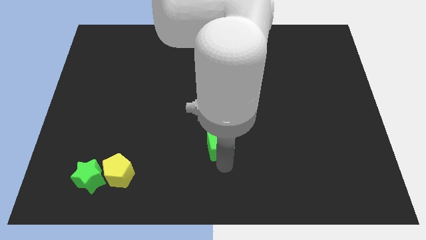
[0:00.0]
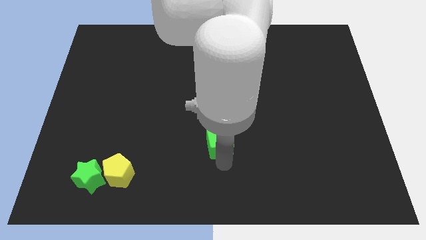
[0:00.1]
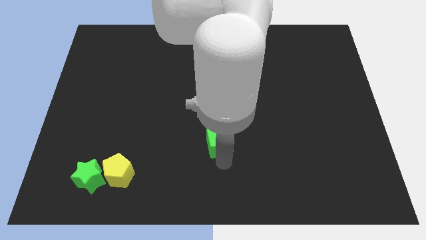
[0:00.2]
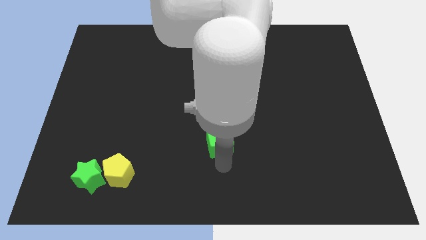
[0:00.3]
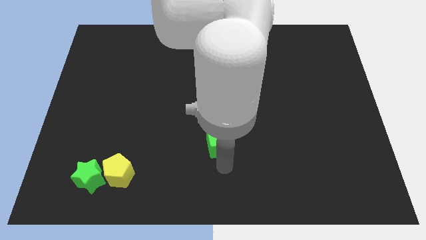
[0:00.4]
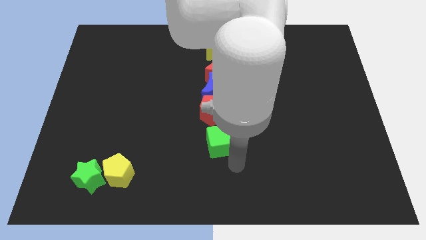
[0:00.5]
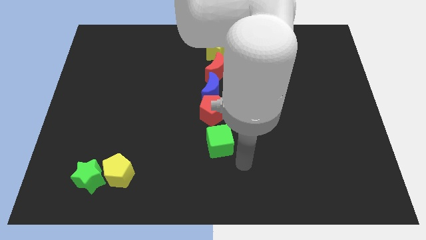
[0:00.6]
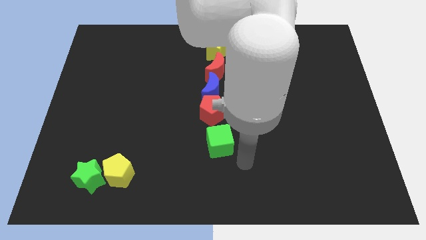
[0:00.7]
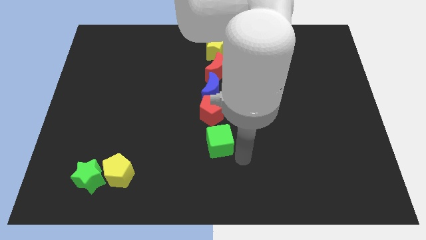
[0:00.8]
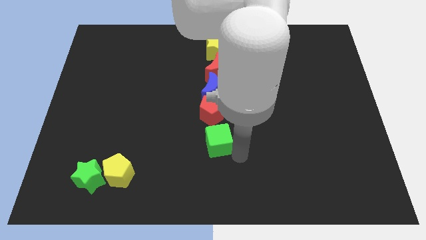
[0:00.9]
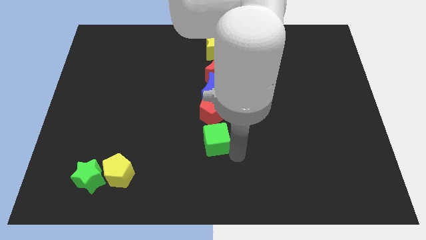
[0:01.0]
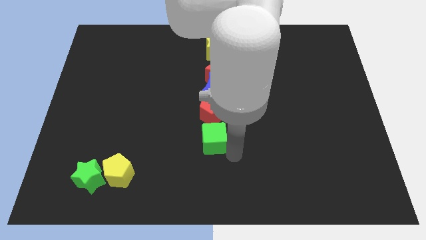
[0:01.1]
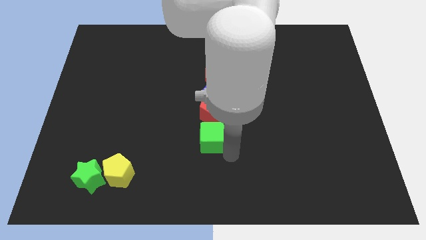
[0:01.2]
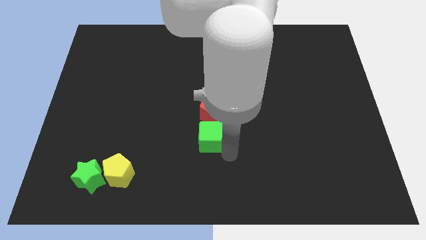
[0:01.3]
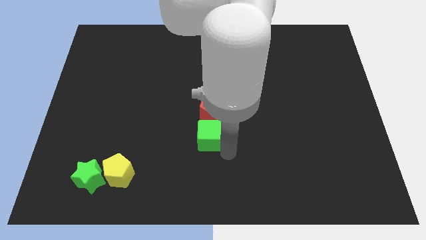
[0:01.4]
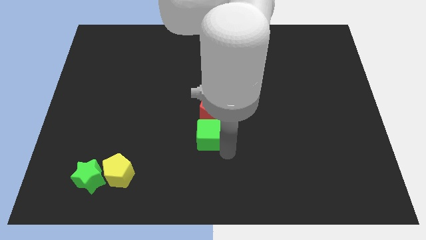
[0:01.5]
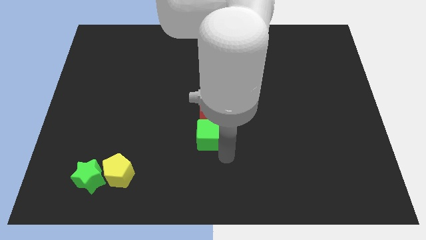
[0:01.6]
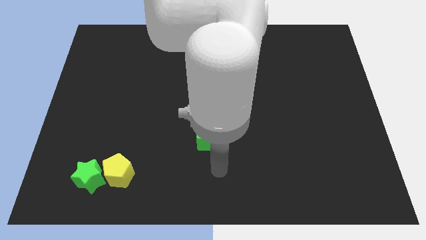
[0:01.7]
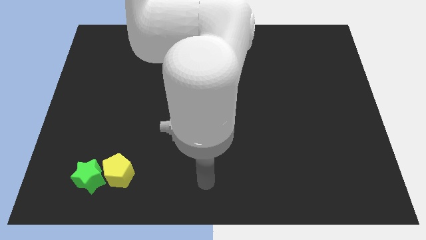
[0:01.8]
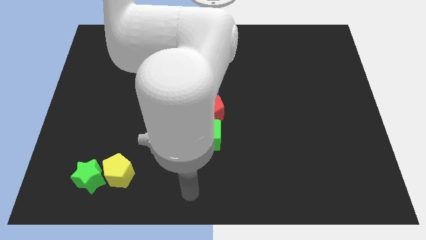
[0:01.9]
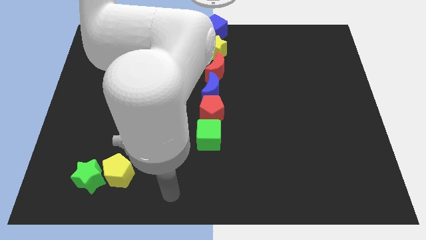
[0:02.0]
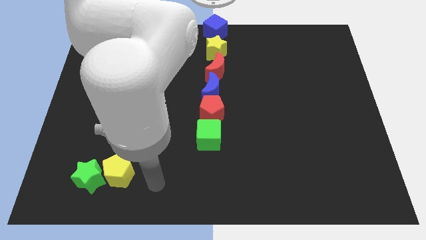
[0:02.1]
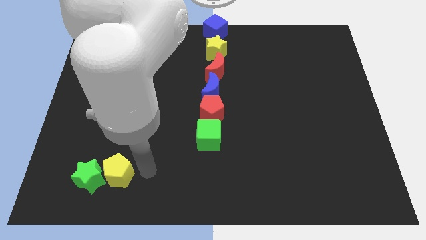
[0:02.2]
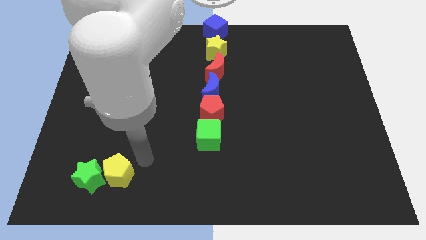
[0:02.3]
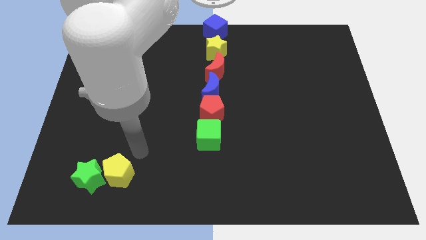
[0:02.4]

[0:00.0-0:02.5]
place the green cube at the bottom of the red pentagon

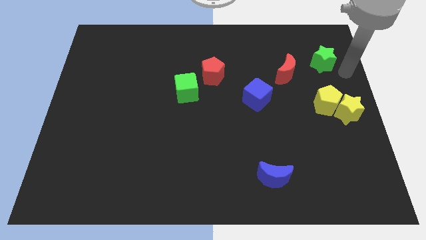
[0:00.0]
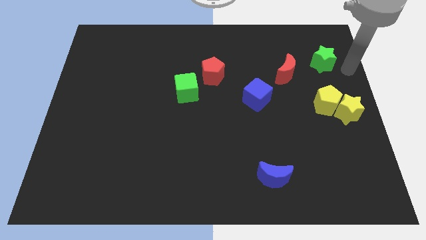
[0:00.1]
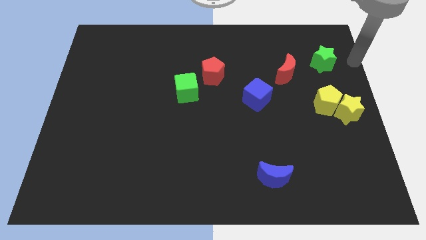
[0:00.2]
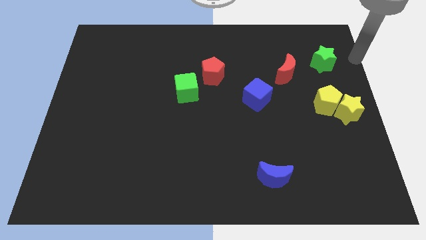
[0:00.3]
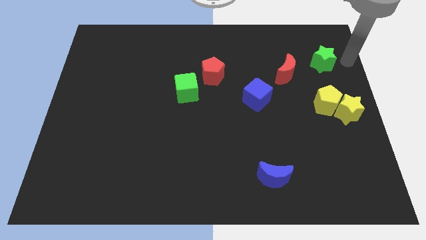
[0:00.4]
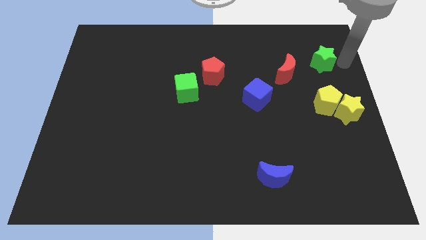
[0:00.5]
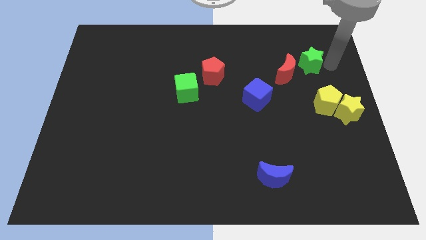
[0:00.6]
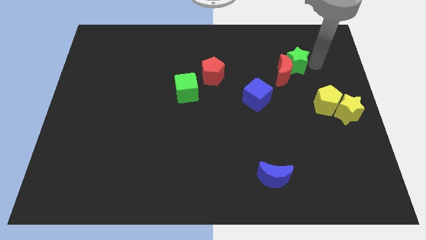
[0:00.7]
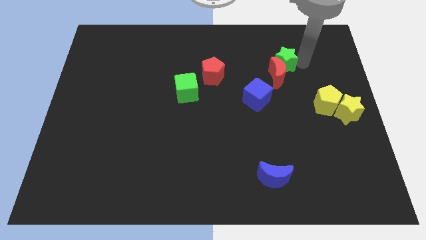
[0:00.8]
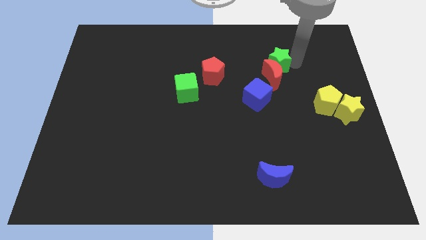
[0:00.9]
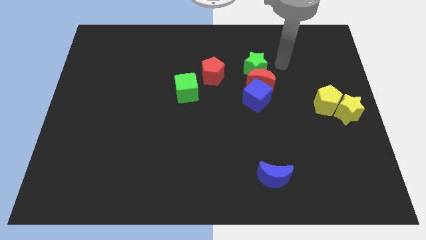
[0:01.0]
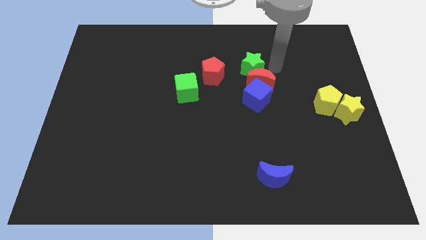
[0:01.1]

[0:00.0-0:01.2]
arrange green star red crescent and blue cube in a vertical line

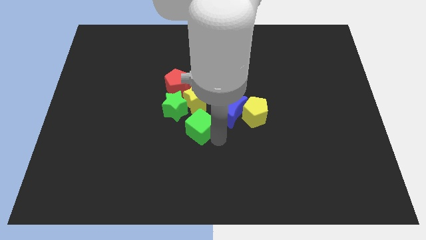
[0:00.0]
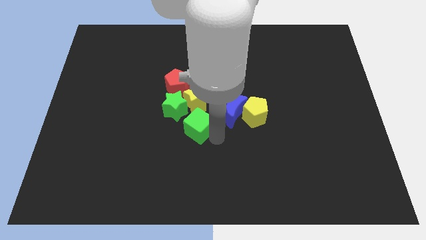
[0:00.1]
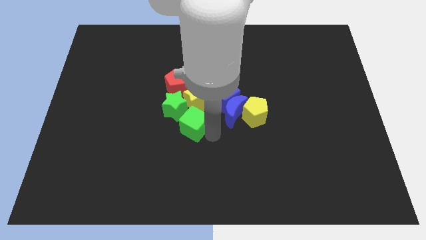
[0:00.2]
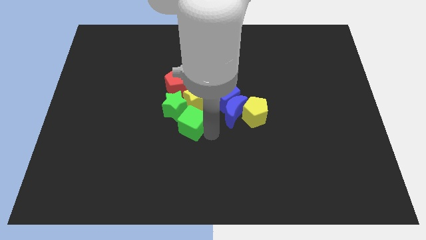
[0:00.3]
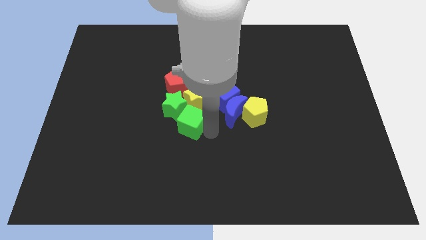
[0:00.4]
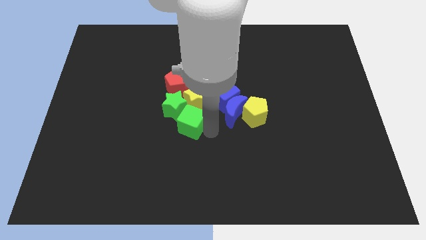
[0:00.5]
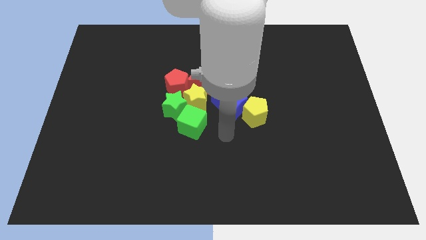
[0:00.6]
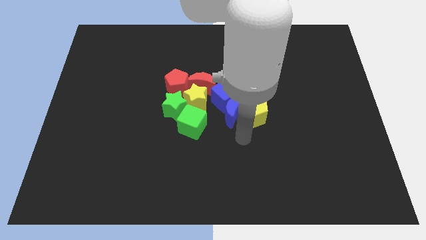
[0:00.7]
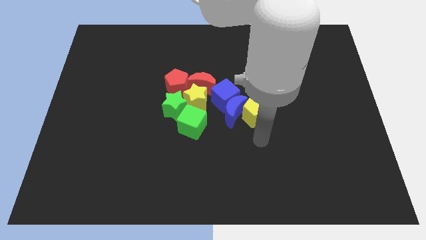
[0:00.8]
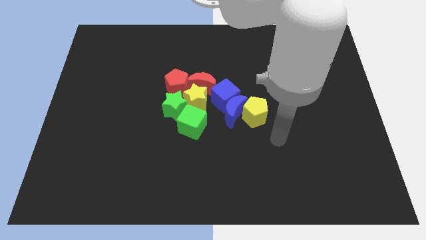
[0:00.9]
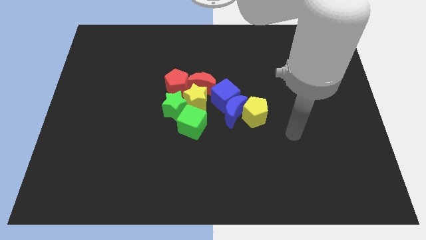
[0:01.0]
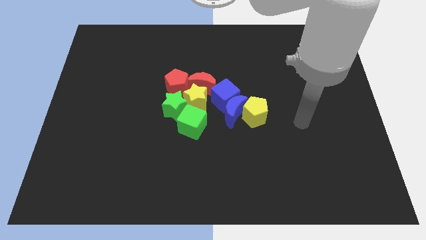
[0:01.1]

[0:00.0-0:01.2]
move the green cube into the green star

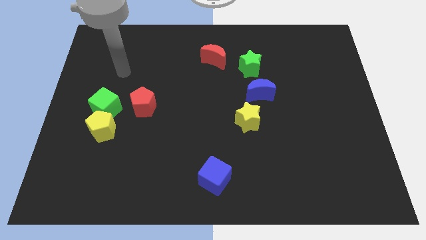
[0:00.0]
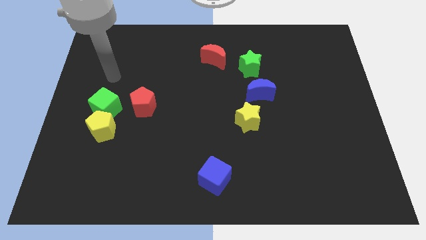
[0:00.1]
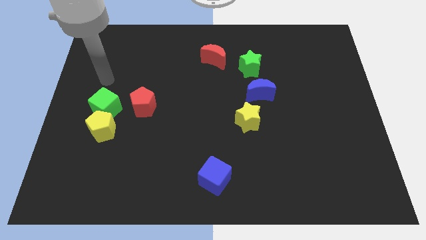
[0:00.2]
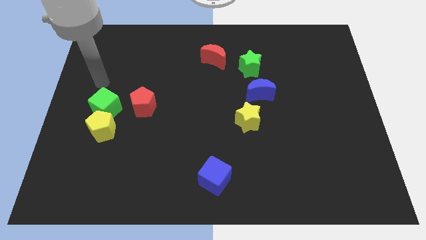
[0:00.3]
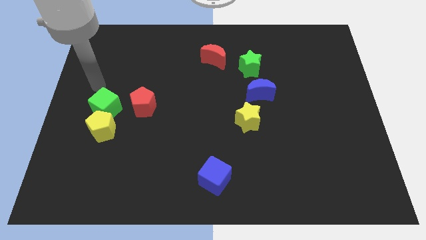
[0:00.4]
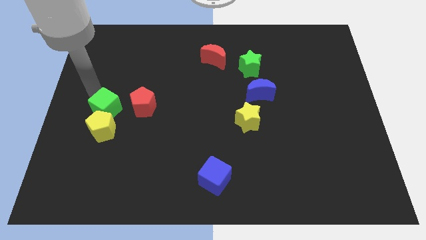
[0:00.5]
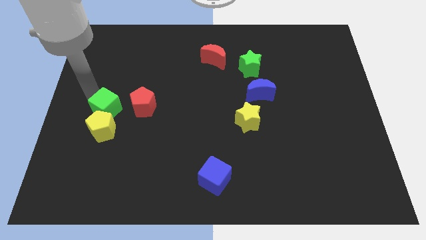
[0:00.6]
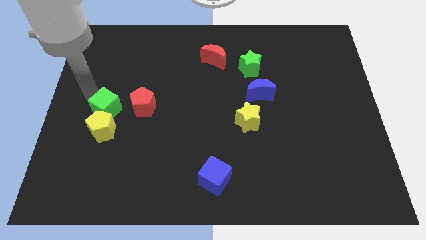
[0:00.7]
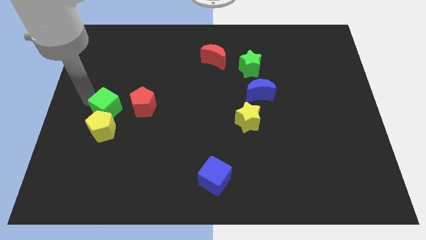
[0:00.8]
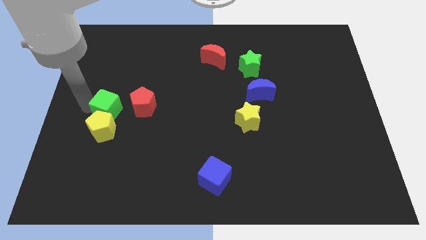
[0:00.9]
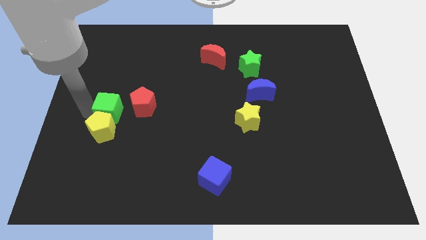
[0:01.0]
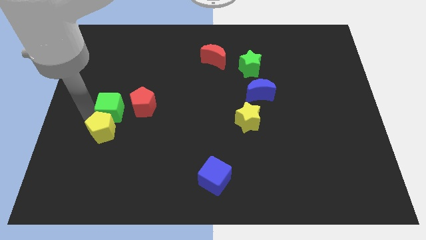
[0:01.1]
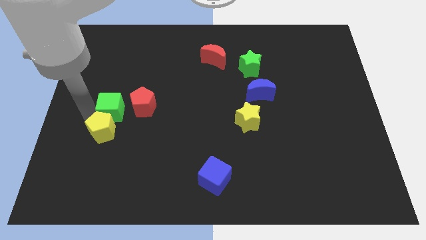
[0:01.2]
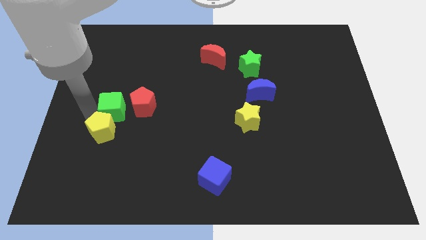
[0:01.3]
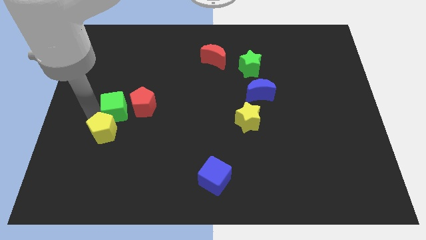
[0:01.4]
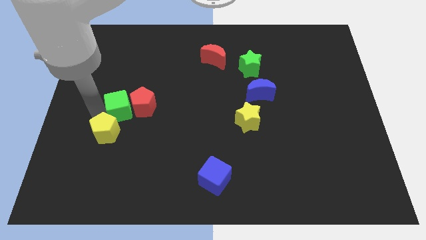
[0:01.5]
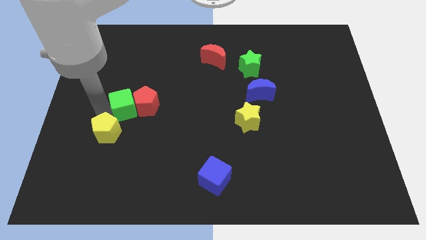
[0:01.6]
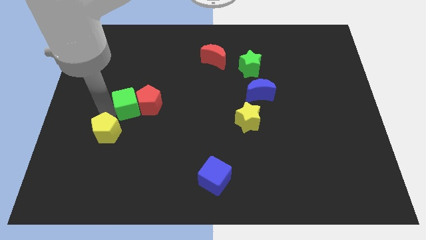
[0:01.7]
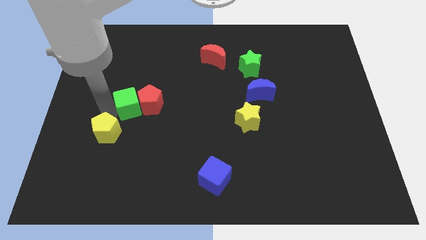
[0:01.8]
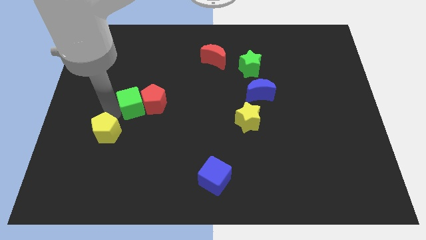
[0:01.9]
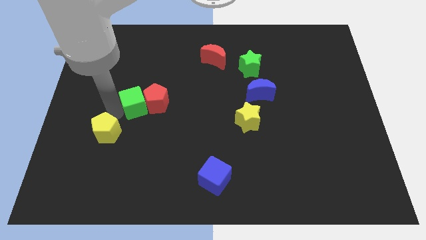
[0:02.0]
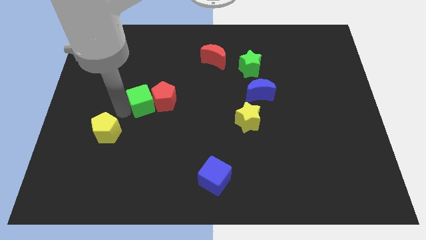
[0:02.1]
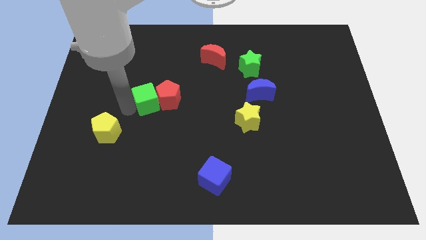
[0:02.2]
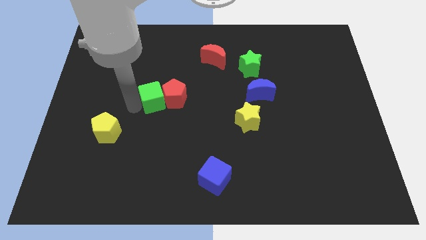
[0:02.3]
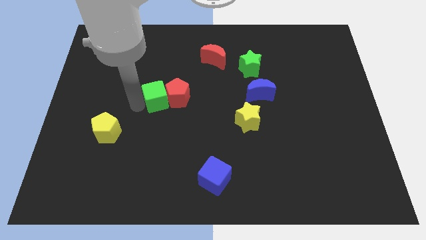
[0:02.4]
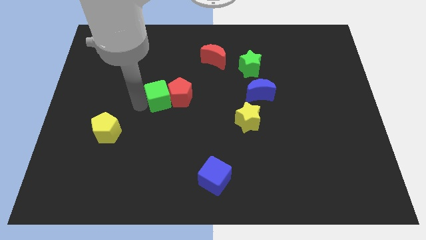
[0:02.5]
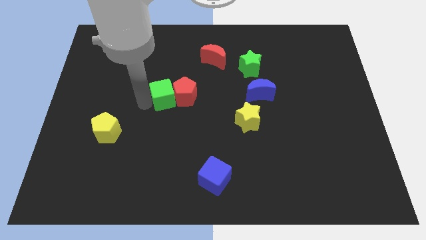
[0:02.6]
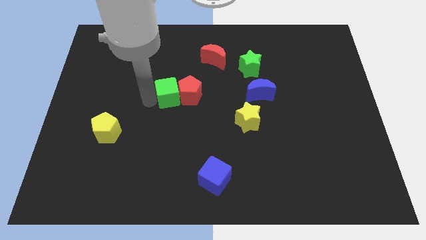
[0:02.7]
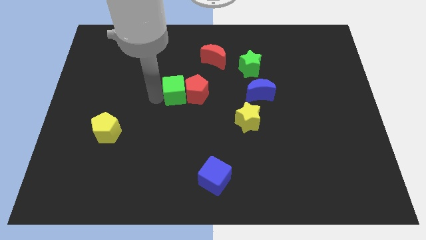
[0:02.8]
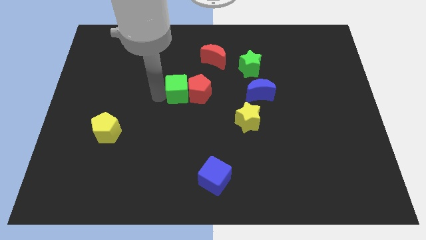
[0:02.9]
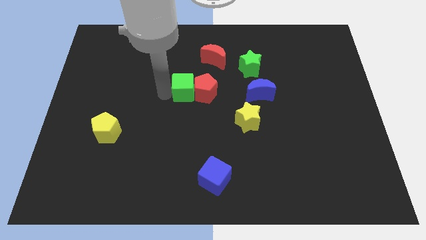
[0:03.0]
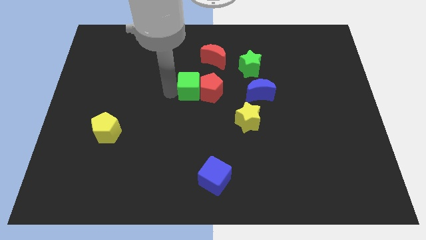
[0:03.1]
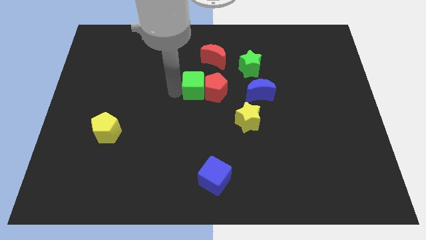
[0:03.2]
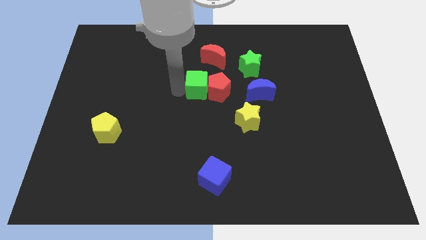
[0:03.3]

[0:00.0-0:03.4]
slide the green star into the red moon

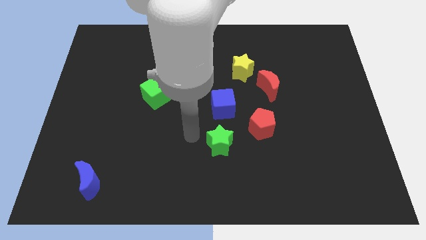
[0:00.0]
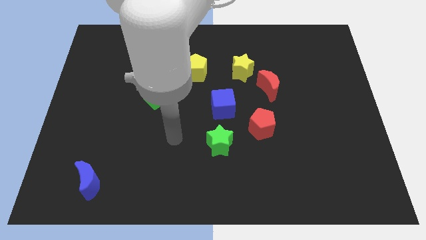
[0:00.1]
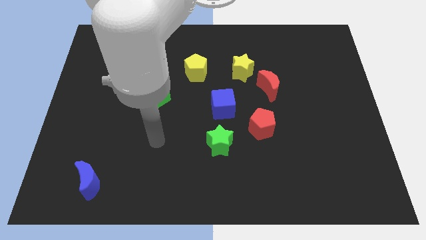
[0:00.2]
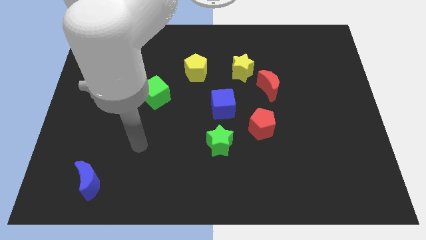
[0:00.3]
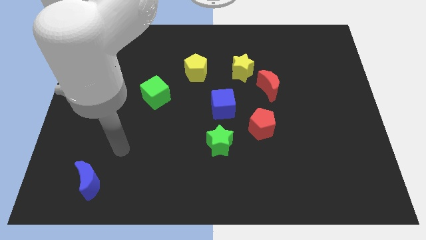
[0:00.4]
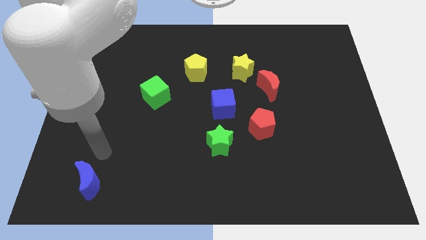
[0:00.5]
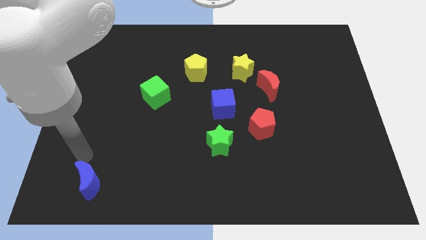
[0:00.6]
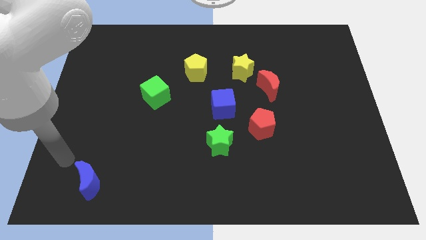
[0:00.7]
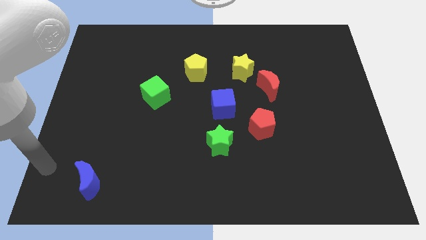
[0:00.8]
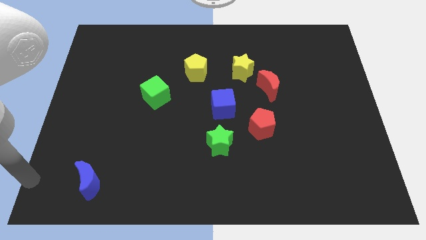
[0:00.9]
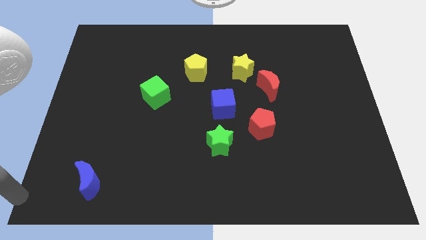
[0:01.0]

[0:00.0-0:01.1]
move your hand to the bottom left corner of the board
